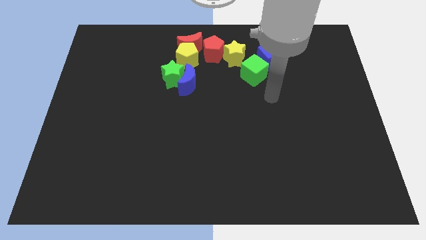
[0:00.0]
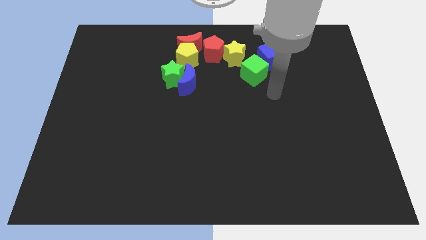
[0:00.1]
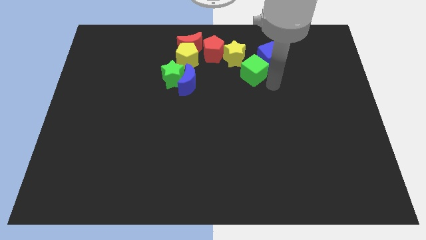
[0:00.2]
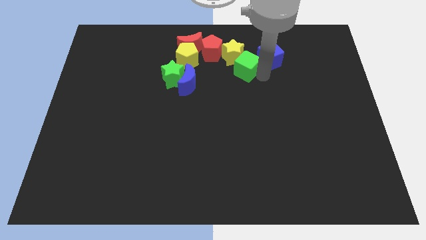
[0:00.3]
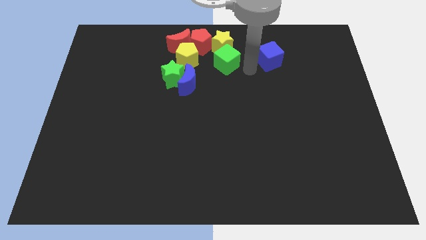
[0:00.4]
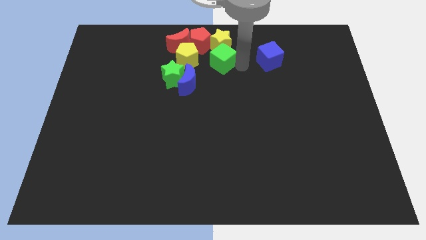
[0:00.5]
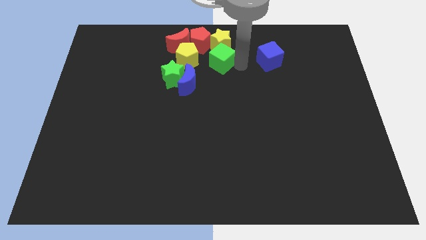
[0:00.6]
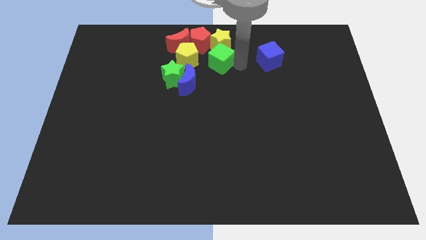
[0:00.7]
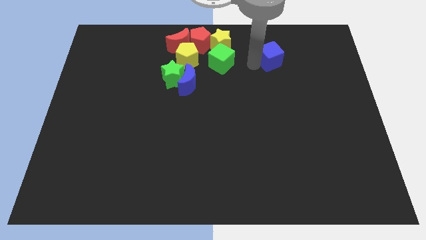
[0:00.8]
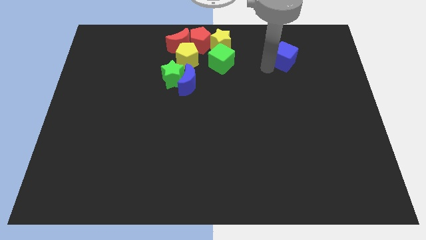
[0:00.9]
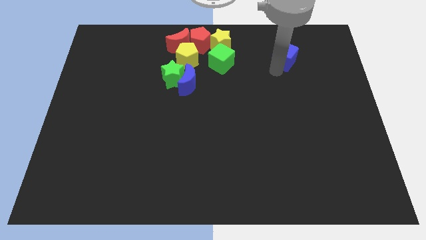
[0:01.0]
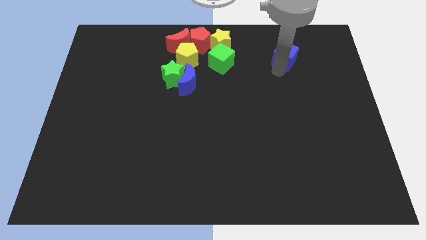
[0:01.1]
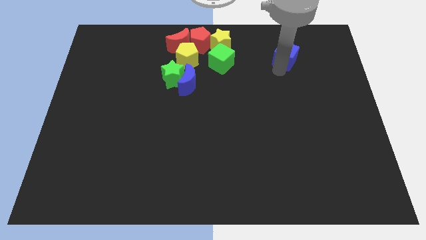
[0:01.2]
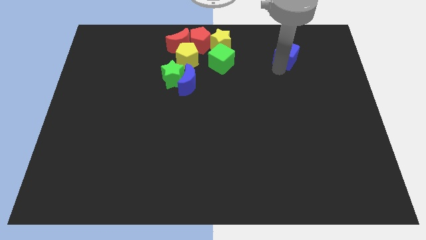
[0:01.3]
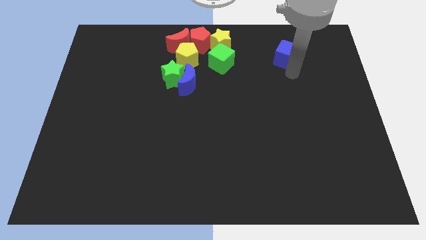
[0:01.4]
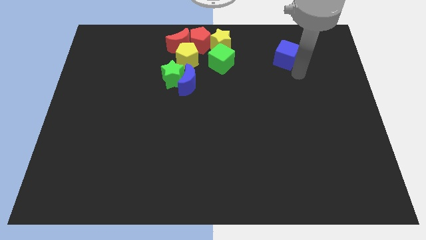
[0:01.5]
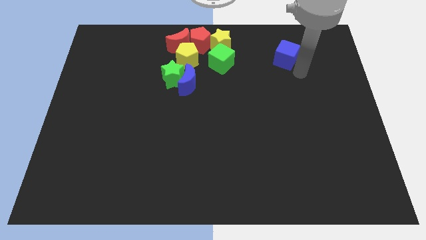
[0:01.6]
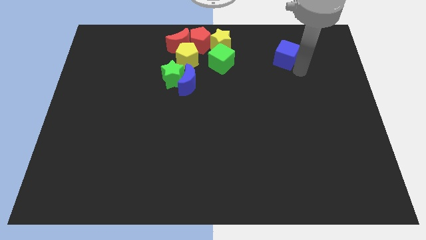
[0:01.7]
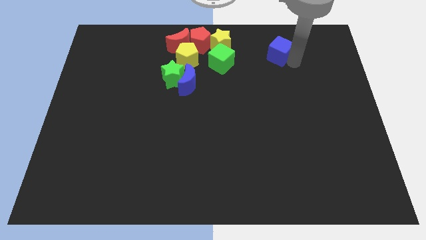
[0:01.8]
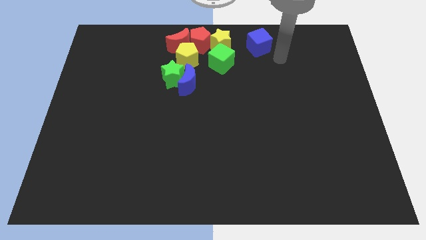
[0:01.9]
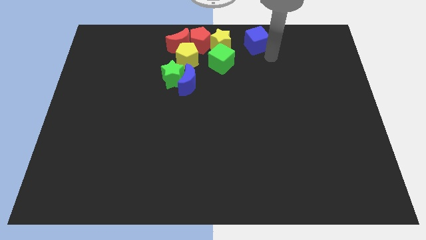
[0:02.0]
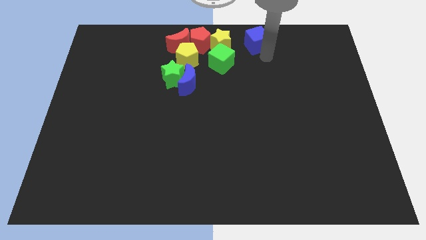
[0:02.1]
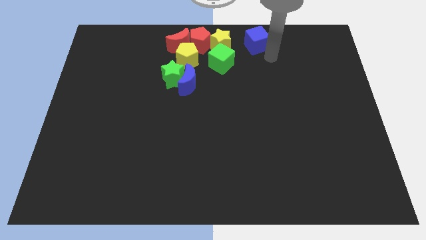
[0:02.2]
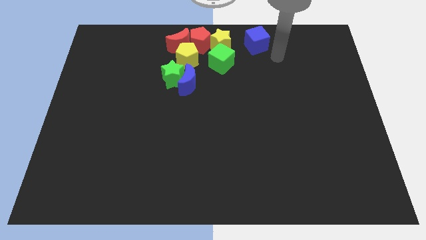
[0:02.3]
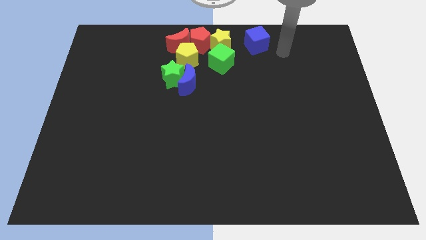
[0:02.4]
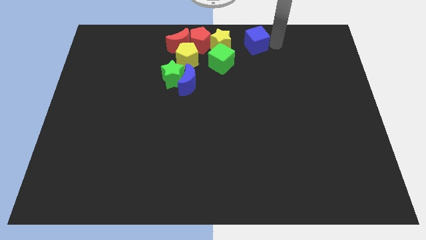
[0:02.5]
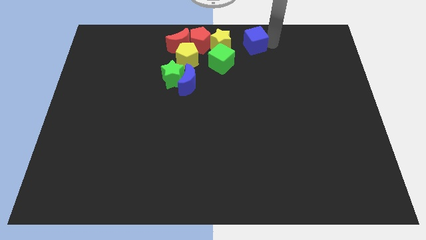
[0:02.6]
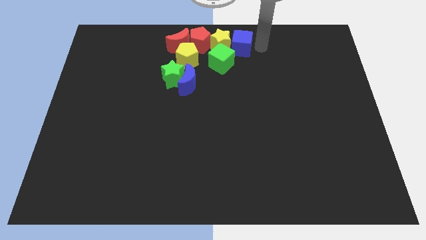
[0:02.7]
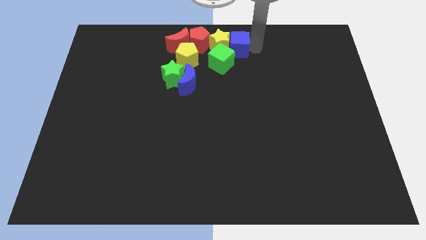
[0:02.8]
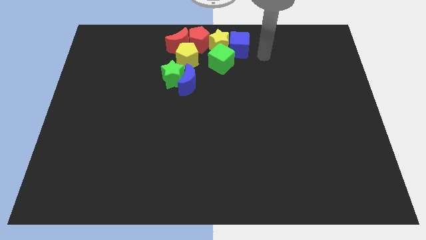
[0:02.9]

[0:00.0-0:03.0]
move the green cube and blue cube into the yellow star

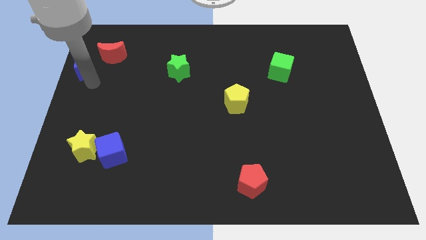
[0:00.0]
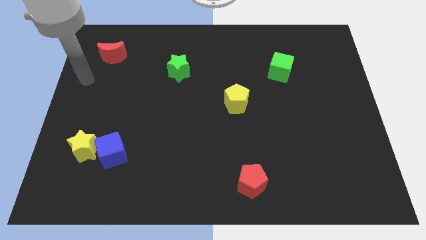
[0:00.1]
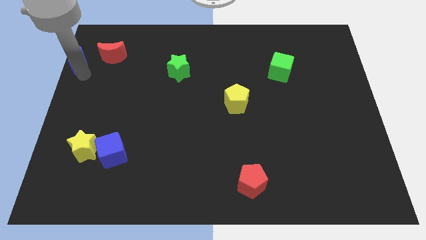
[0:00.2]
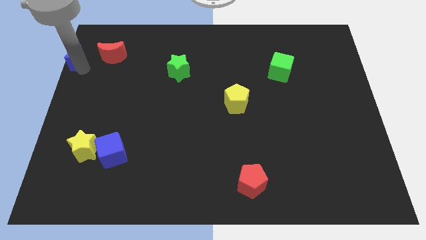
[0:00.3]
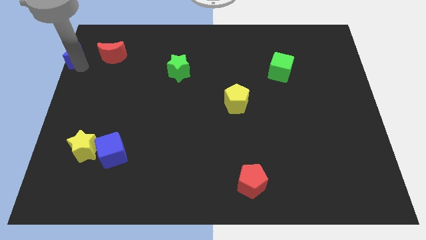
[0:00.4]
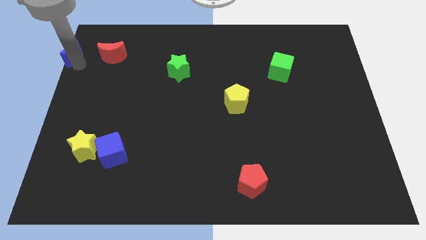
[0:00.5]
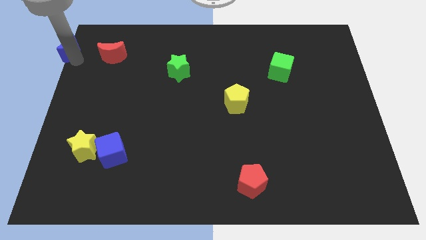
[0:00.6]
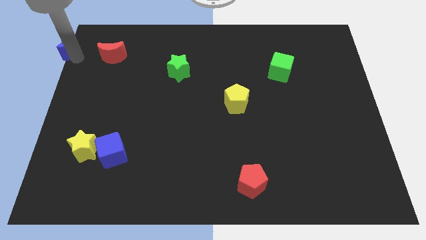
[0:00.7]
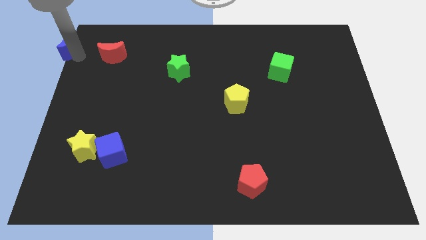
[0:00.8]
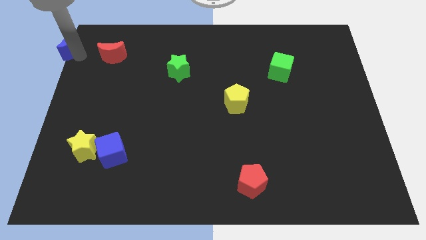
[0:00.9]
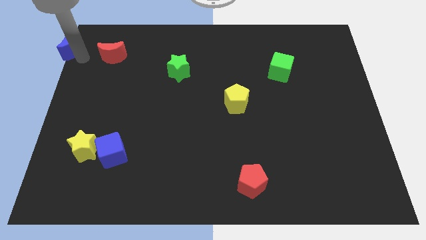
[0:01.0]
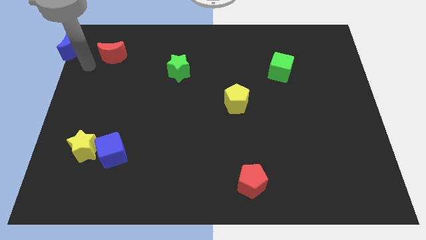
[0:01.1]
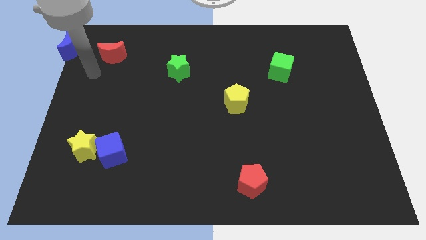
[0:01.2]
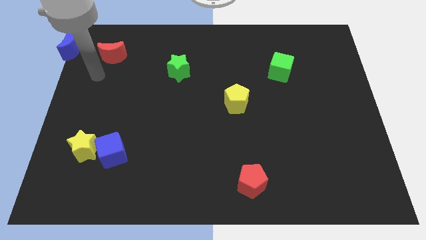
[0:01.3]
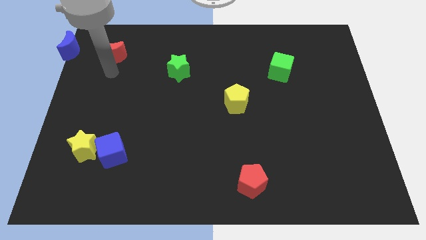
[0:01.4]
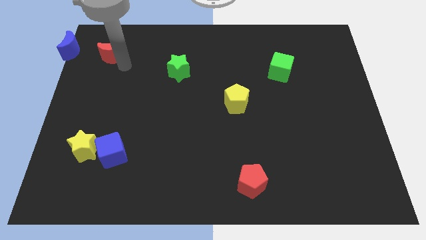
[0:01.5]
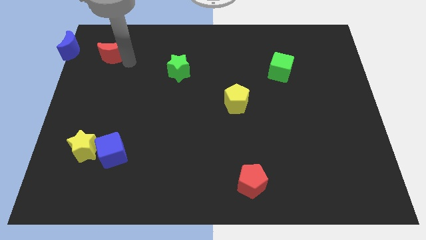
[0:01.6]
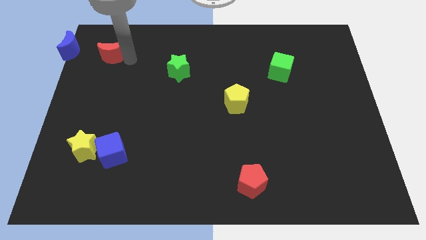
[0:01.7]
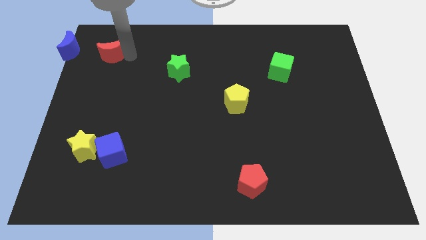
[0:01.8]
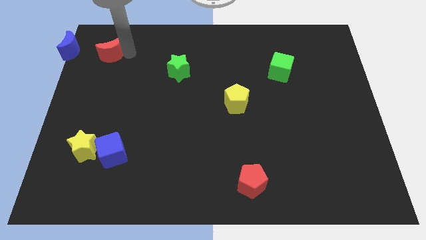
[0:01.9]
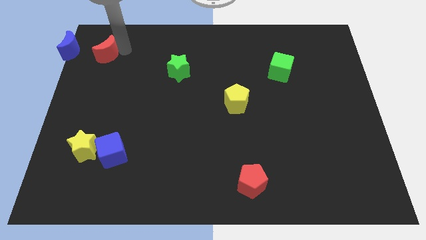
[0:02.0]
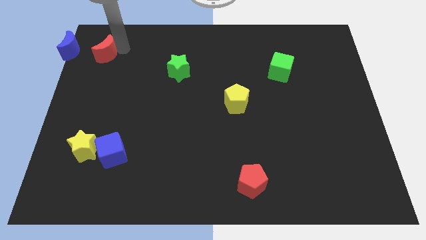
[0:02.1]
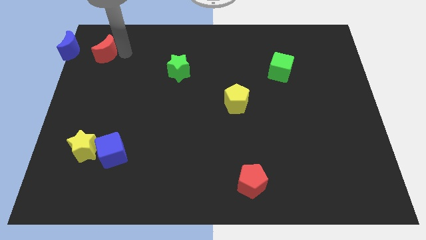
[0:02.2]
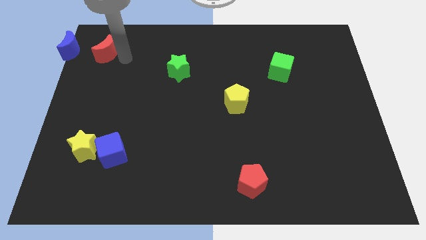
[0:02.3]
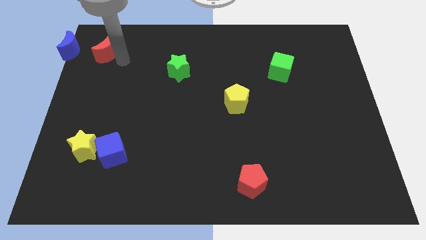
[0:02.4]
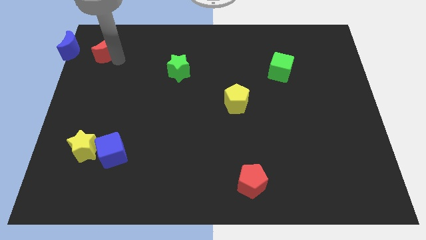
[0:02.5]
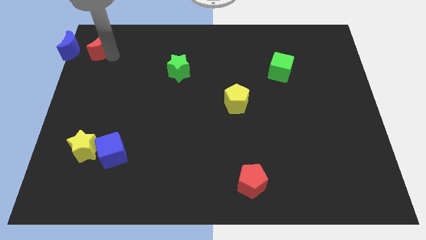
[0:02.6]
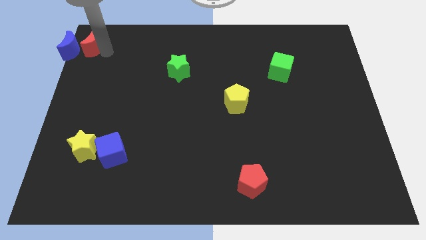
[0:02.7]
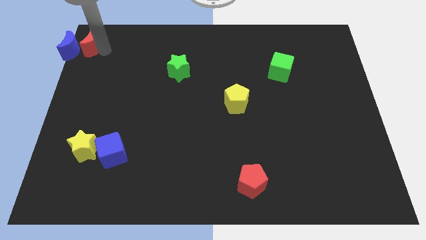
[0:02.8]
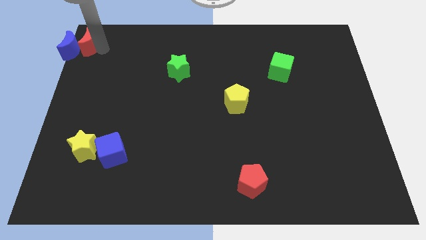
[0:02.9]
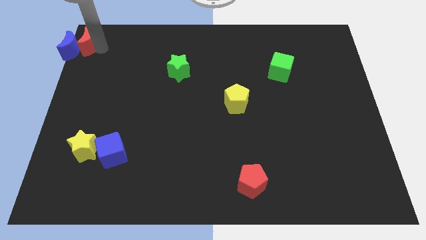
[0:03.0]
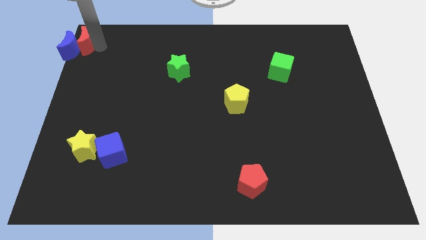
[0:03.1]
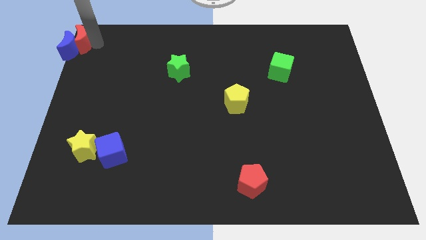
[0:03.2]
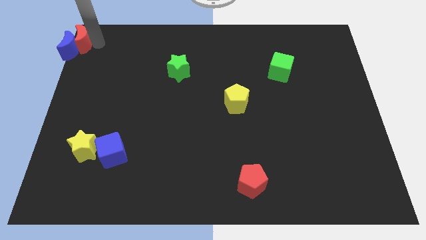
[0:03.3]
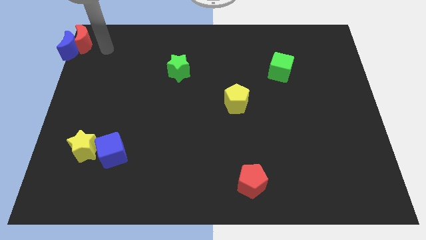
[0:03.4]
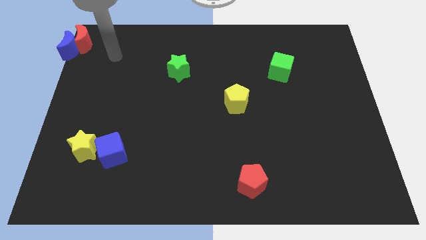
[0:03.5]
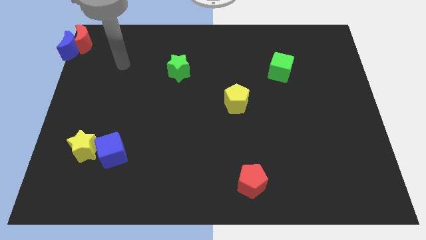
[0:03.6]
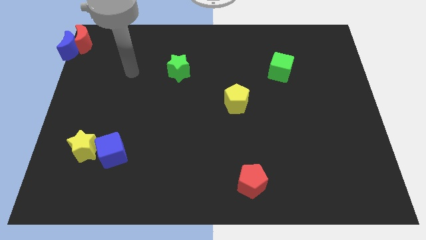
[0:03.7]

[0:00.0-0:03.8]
push the red moon into the blue cube

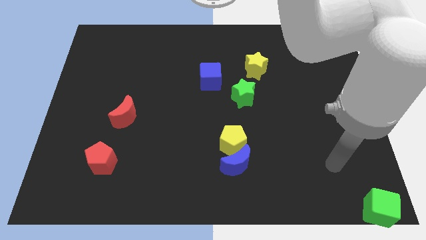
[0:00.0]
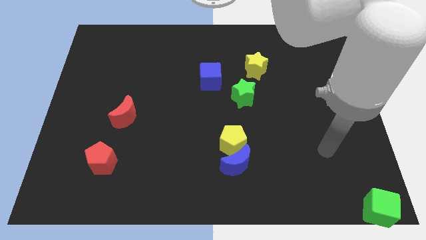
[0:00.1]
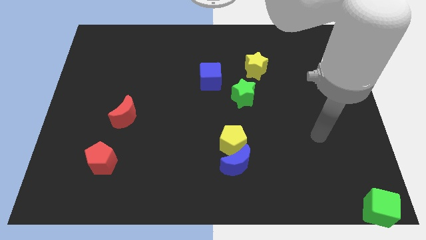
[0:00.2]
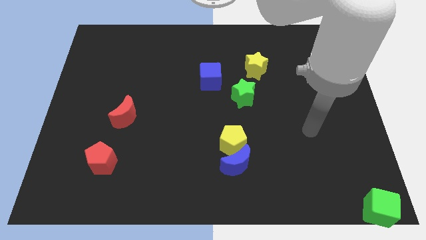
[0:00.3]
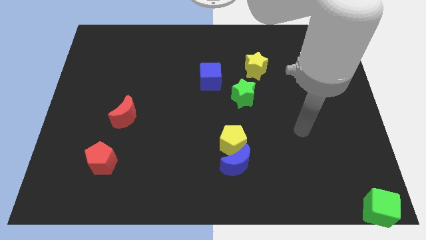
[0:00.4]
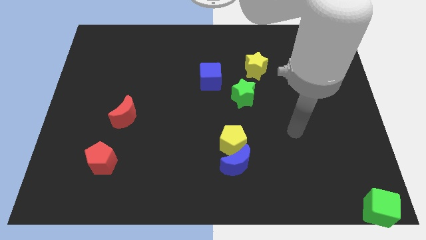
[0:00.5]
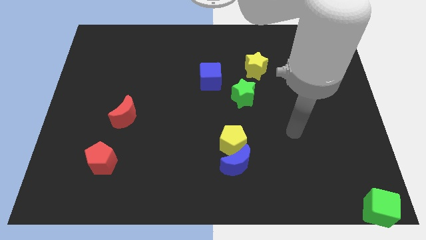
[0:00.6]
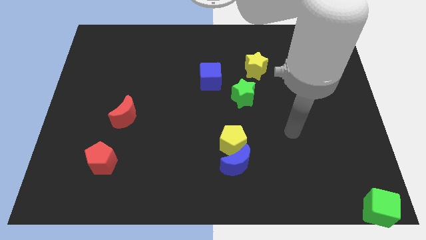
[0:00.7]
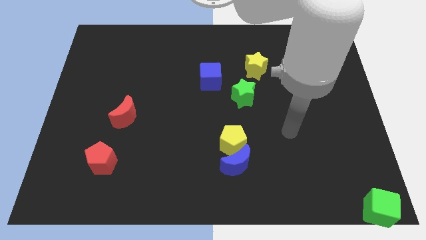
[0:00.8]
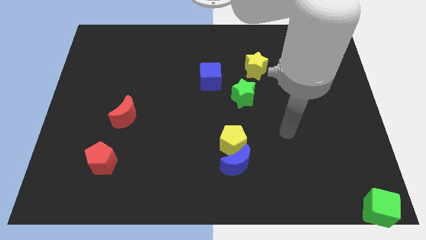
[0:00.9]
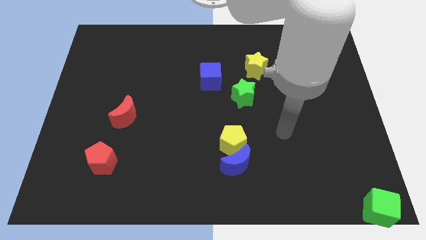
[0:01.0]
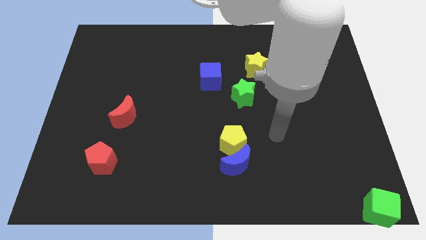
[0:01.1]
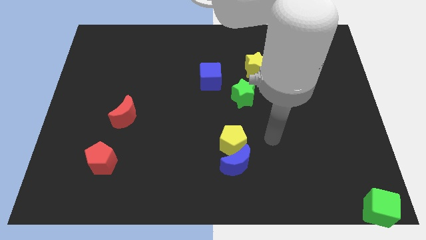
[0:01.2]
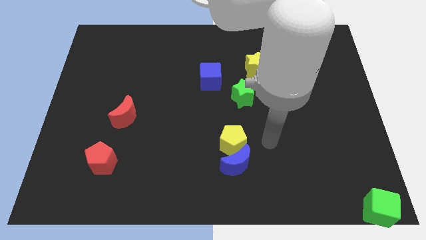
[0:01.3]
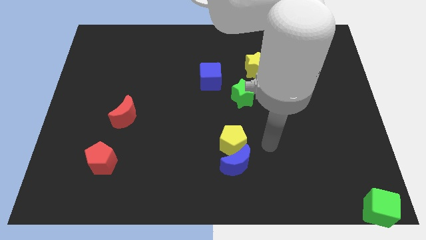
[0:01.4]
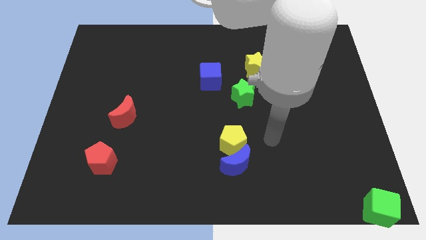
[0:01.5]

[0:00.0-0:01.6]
move your arm towards the right side of the yellow pentagon

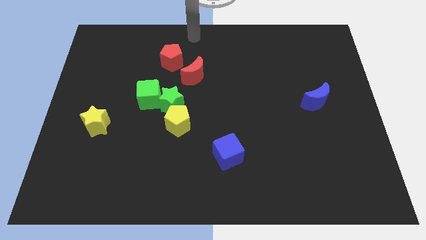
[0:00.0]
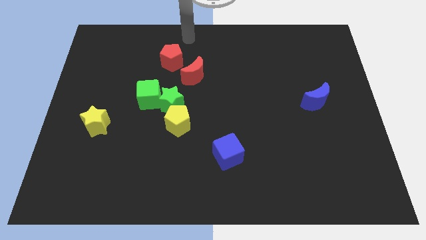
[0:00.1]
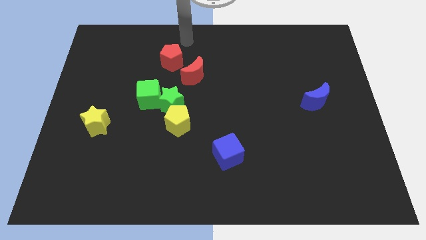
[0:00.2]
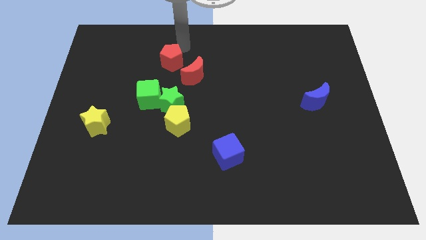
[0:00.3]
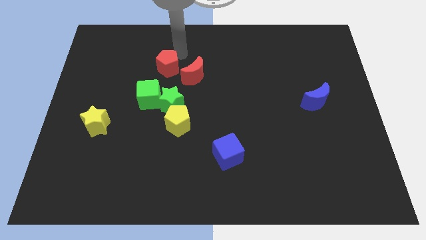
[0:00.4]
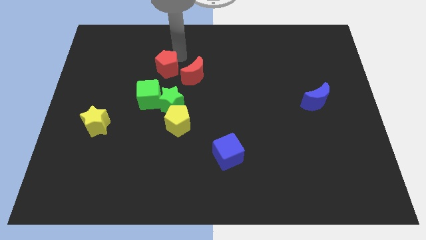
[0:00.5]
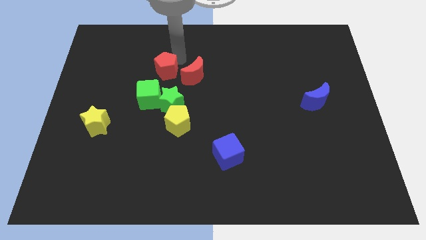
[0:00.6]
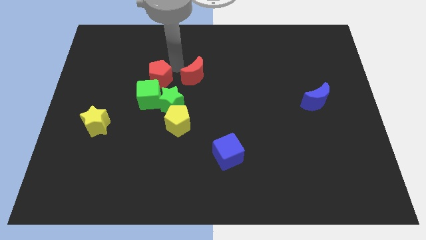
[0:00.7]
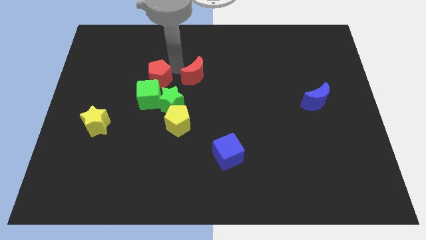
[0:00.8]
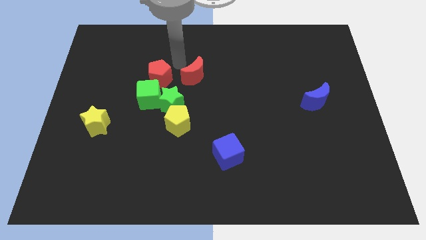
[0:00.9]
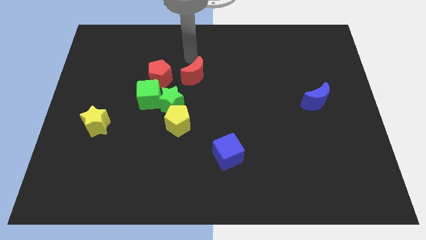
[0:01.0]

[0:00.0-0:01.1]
push red pentagon towards green cube
